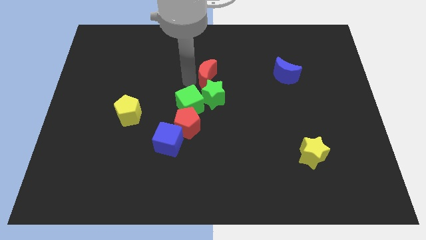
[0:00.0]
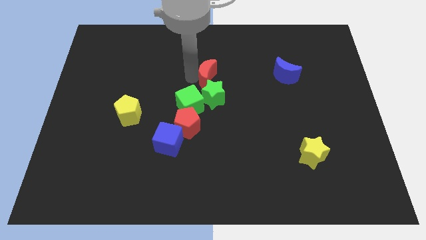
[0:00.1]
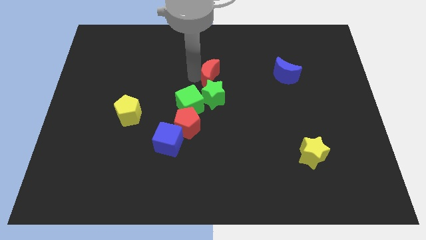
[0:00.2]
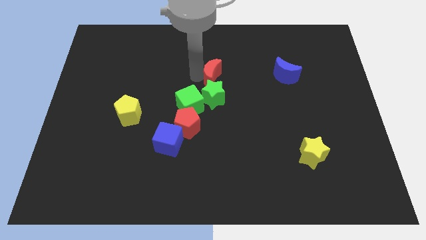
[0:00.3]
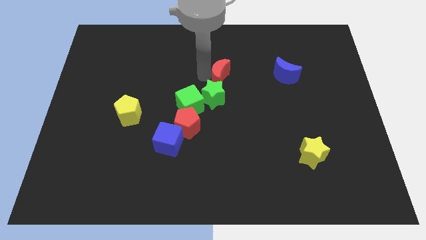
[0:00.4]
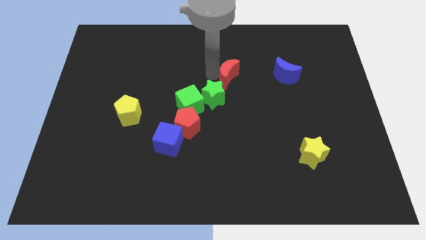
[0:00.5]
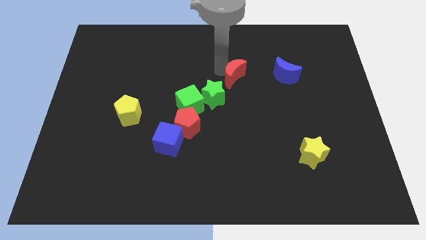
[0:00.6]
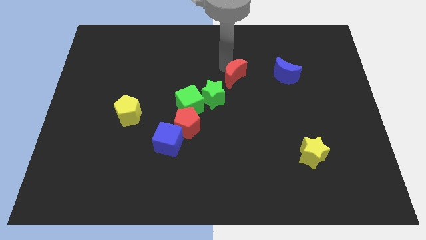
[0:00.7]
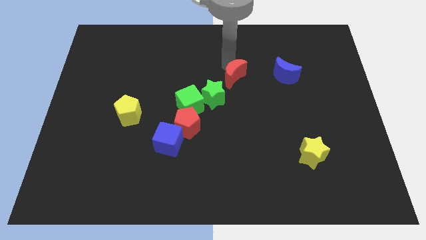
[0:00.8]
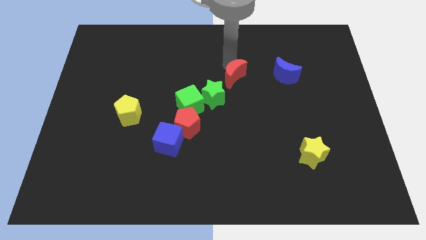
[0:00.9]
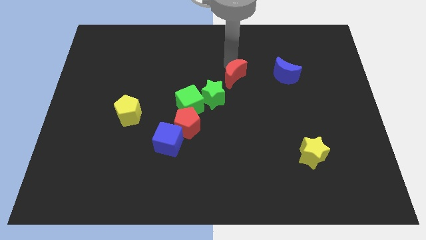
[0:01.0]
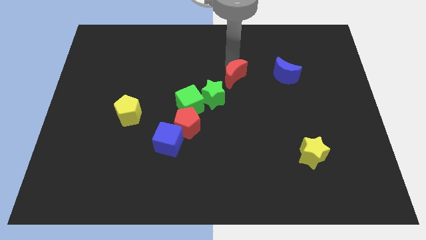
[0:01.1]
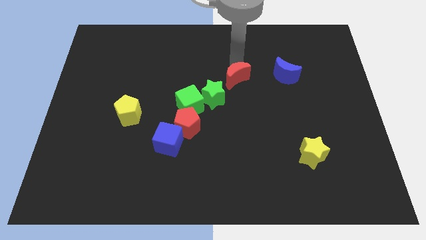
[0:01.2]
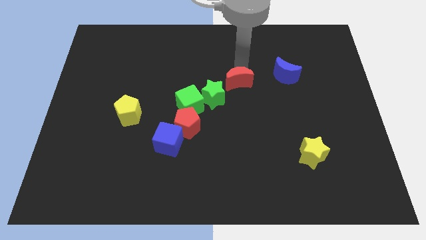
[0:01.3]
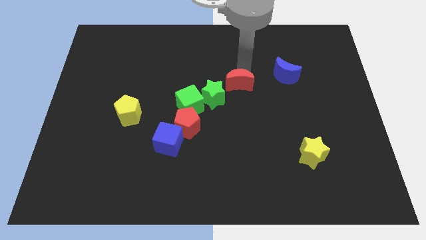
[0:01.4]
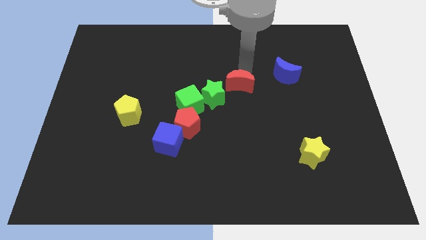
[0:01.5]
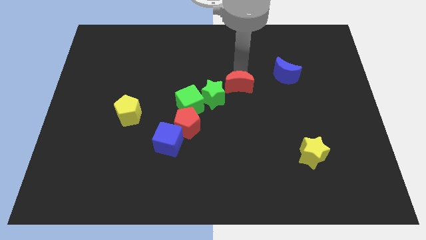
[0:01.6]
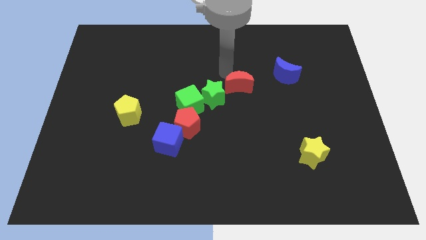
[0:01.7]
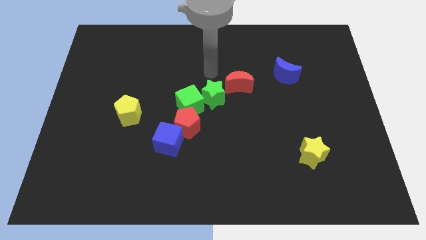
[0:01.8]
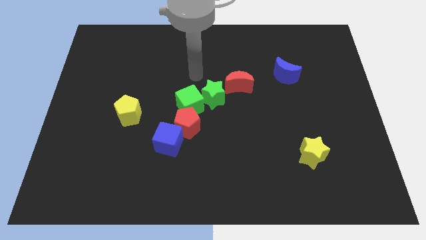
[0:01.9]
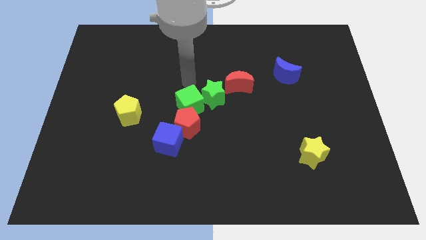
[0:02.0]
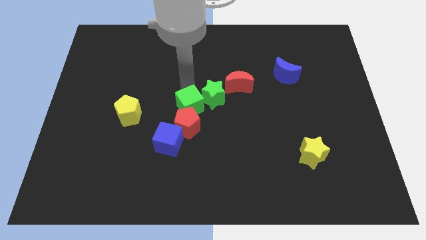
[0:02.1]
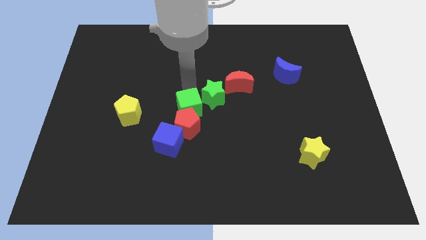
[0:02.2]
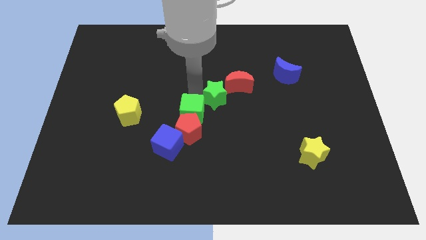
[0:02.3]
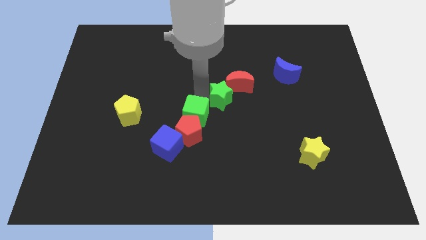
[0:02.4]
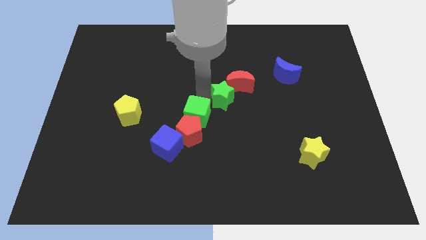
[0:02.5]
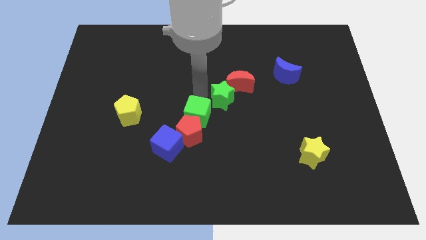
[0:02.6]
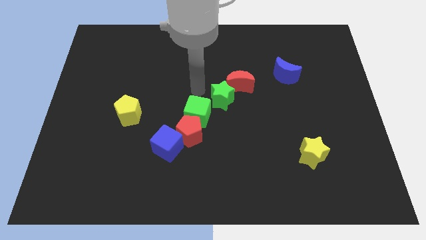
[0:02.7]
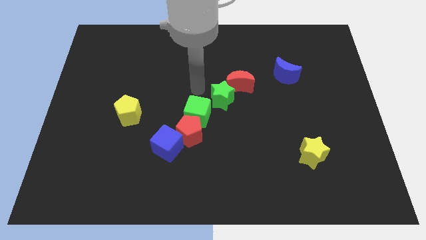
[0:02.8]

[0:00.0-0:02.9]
slightly move the green cube and the red crescent towards down

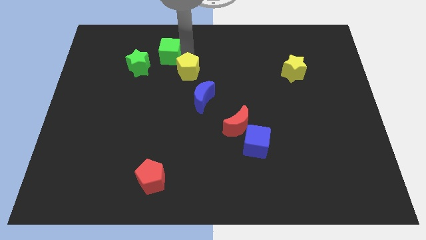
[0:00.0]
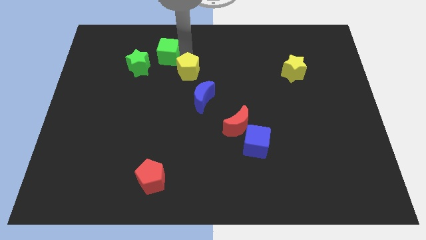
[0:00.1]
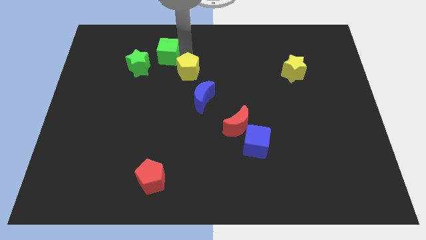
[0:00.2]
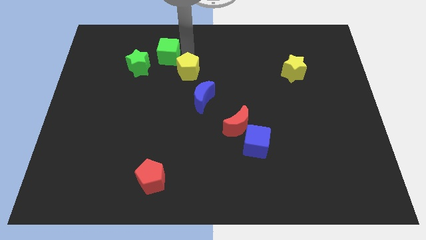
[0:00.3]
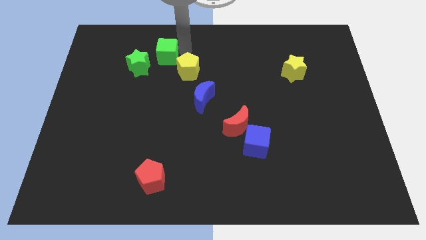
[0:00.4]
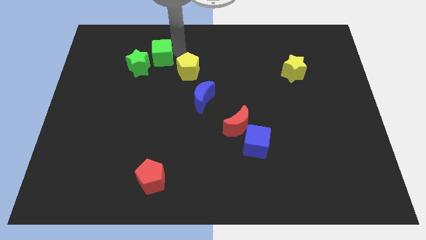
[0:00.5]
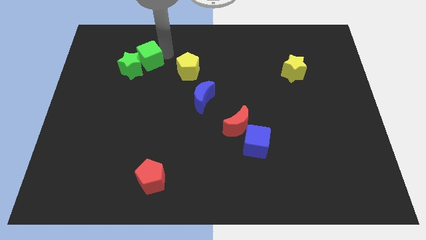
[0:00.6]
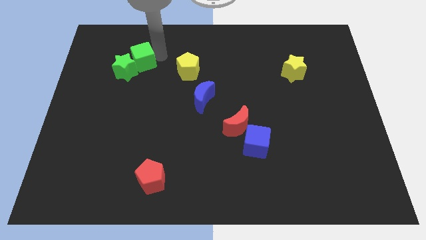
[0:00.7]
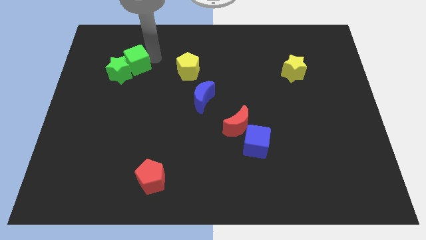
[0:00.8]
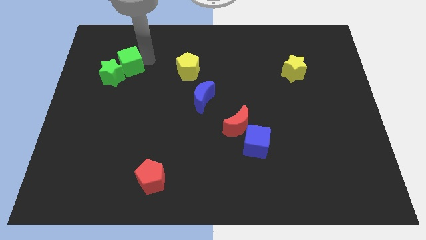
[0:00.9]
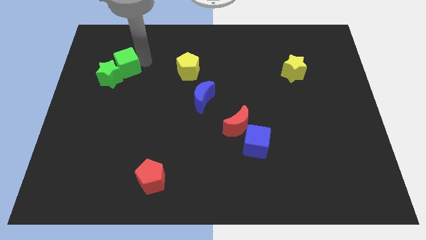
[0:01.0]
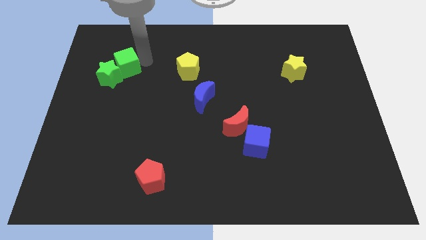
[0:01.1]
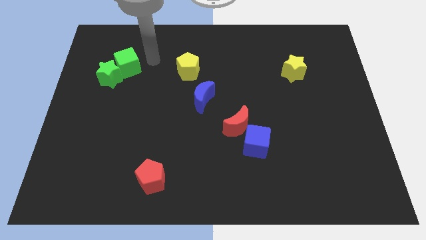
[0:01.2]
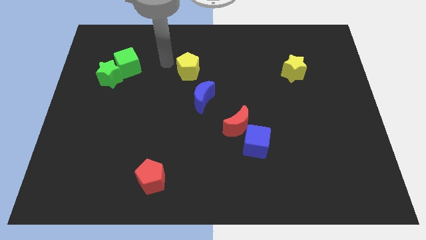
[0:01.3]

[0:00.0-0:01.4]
push the green cube into the green star

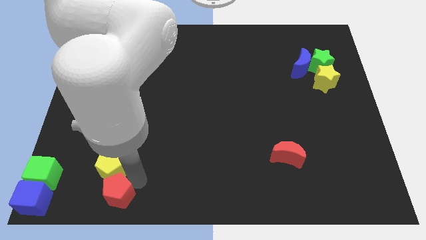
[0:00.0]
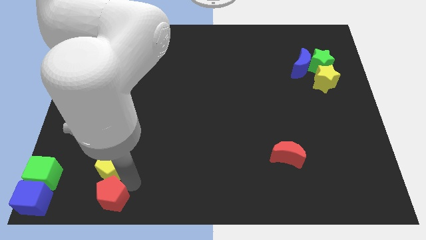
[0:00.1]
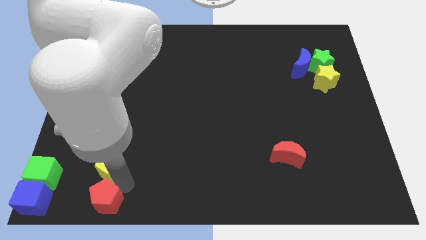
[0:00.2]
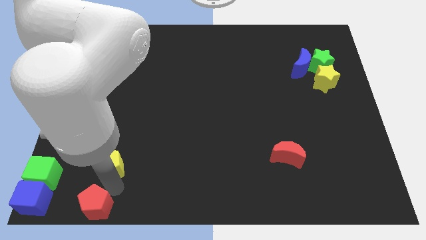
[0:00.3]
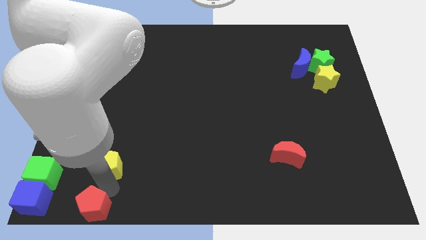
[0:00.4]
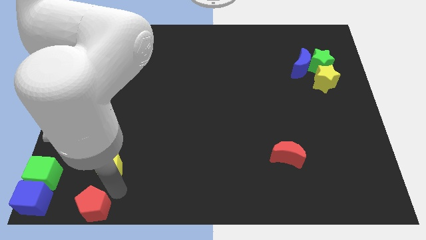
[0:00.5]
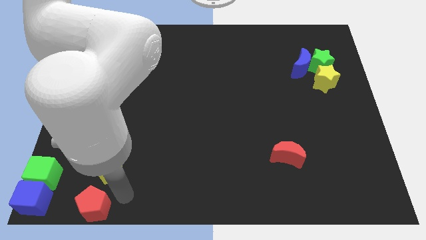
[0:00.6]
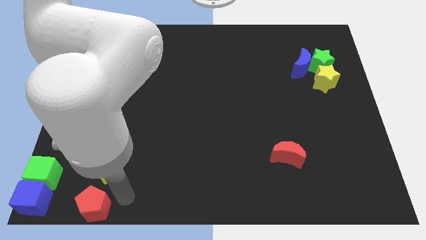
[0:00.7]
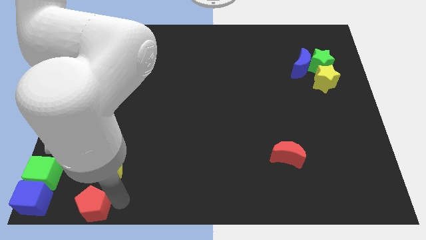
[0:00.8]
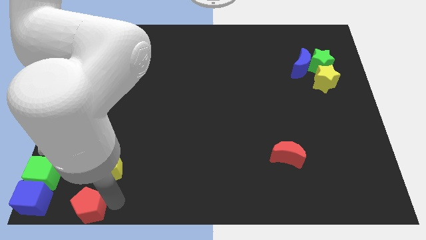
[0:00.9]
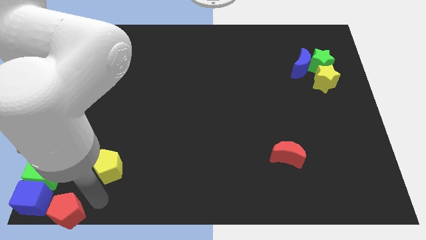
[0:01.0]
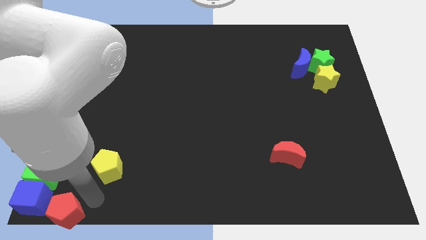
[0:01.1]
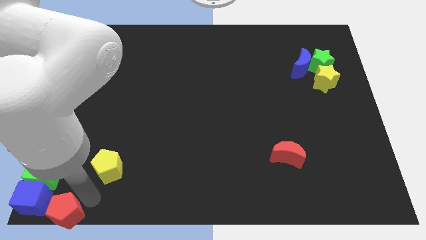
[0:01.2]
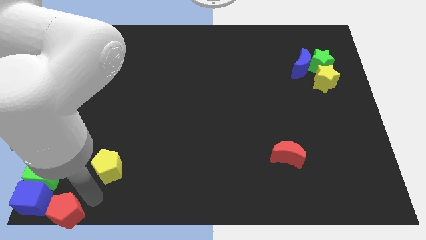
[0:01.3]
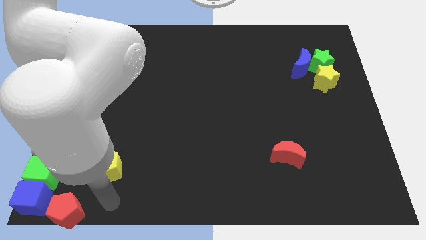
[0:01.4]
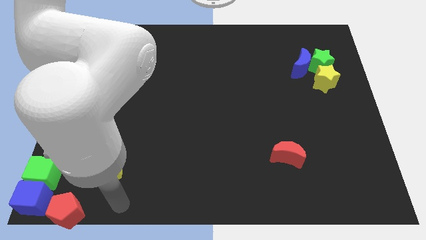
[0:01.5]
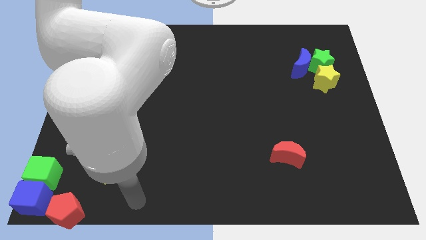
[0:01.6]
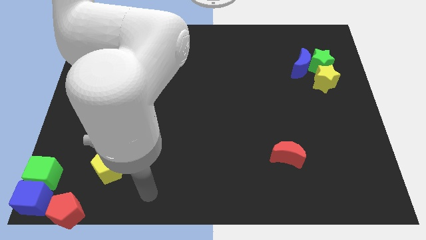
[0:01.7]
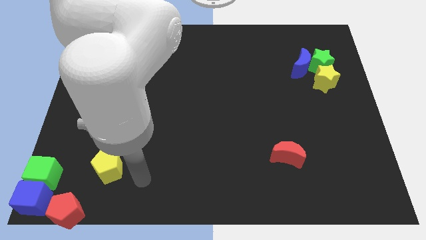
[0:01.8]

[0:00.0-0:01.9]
move red pentagon to the right of blue cube

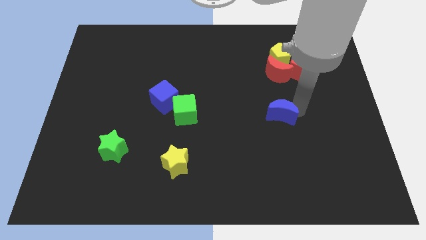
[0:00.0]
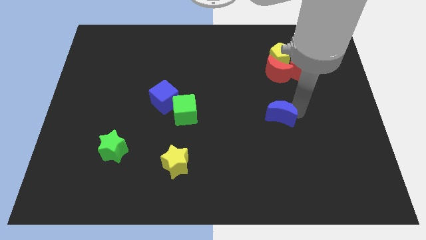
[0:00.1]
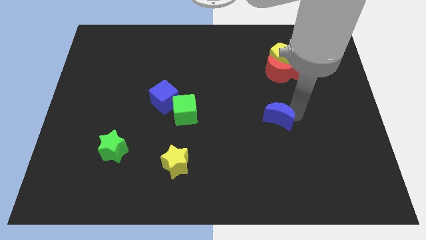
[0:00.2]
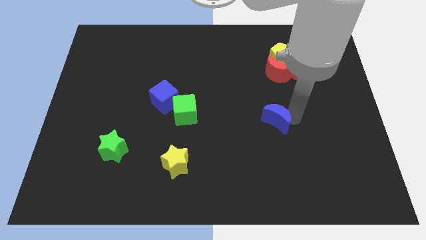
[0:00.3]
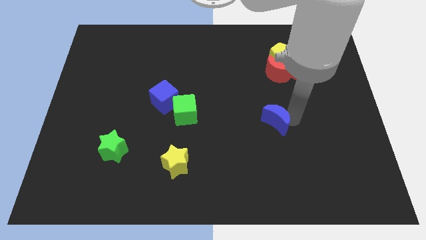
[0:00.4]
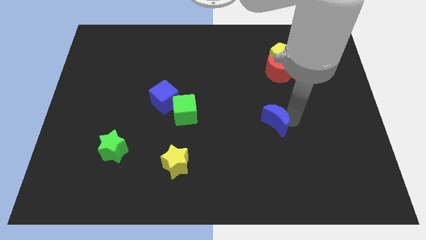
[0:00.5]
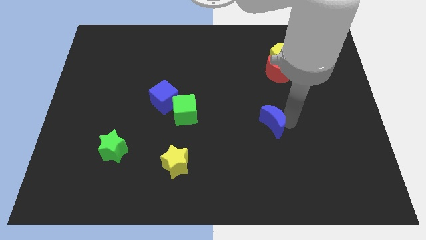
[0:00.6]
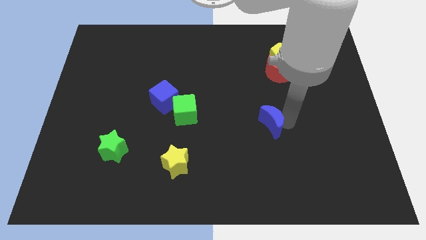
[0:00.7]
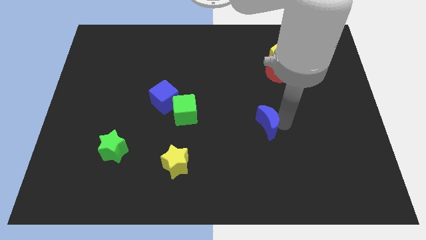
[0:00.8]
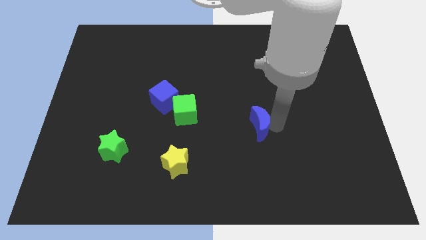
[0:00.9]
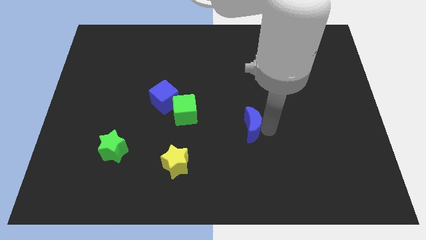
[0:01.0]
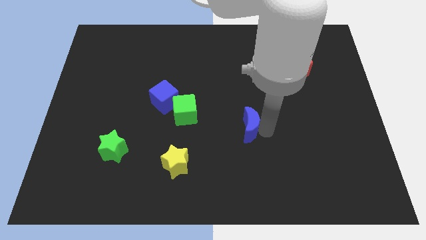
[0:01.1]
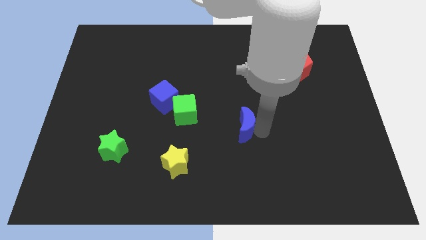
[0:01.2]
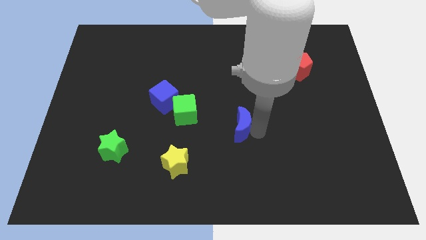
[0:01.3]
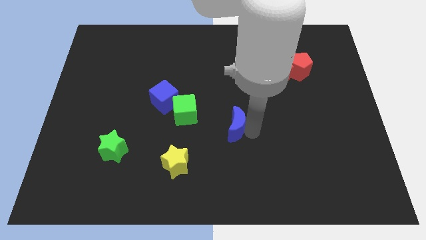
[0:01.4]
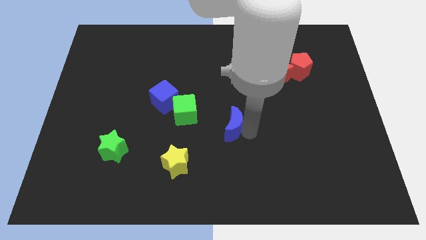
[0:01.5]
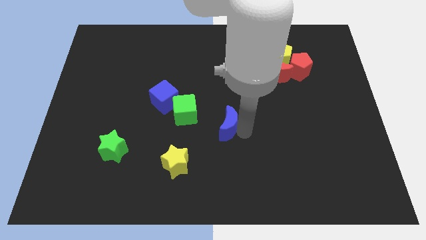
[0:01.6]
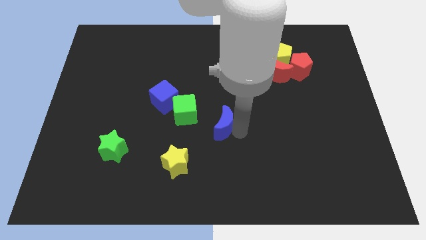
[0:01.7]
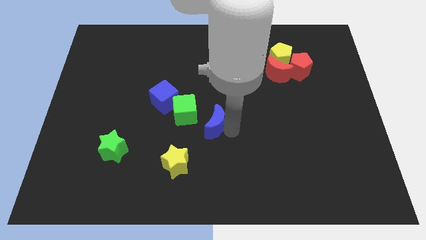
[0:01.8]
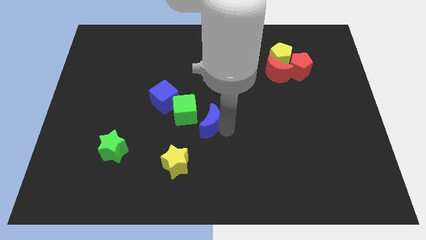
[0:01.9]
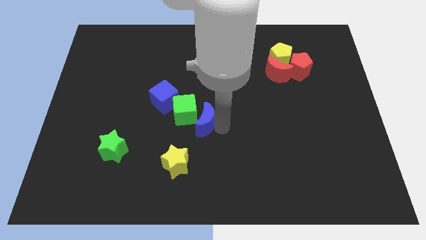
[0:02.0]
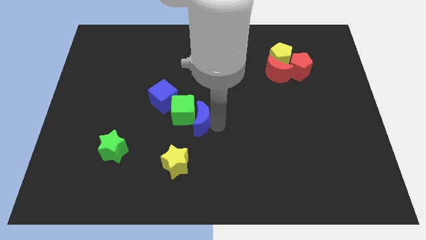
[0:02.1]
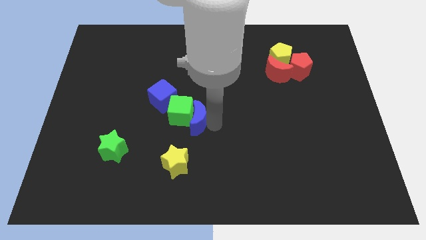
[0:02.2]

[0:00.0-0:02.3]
push the blue crescent to the right of the green cube

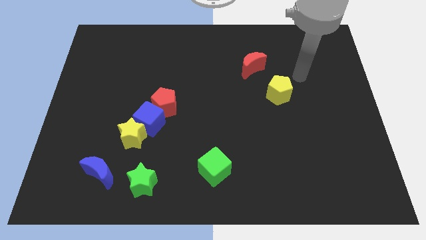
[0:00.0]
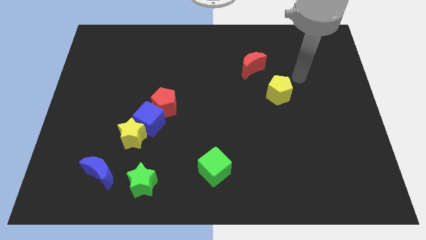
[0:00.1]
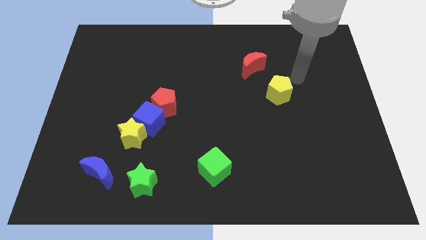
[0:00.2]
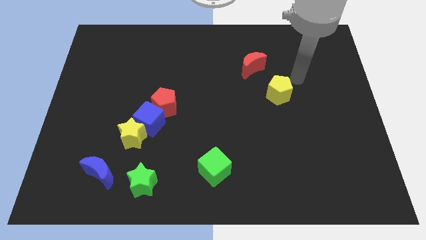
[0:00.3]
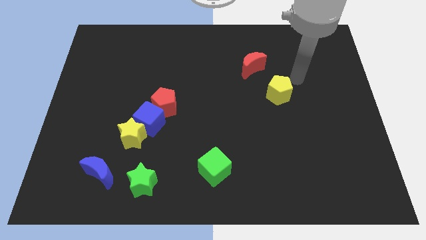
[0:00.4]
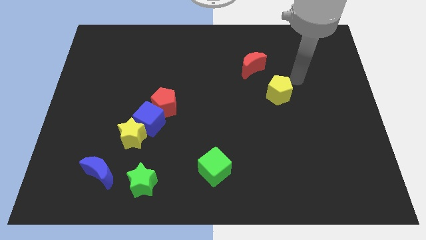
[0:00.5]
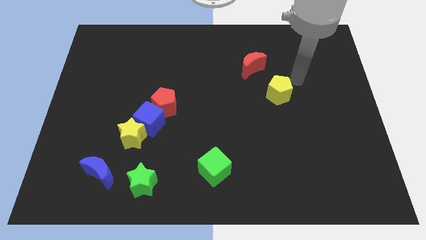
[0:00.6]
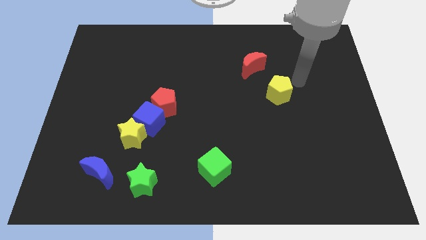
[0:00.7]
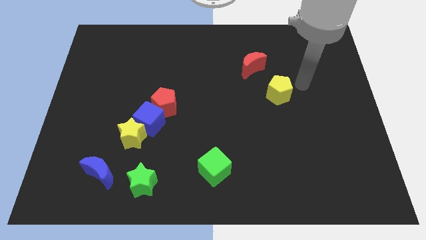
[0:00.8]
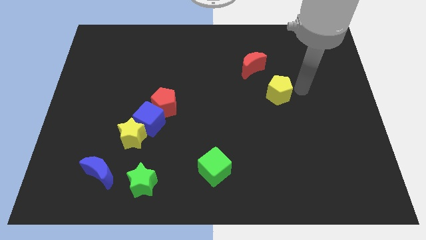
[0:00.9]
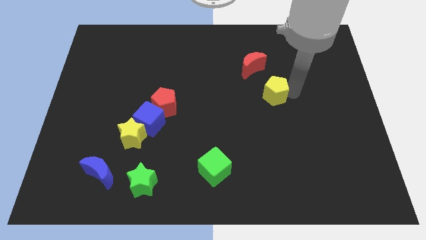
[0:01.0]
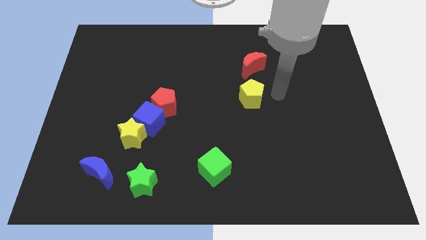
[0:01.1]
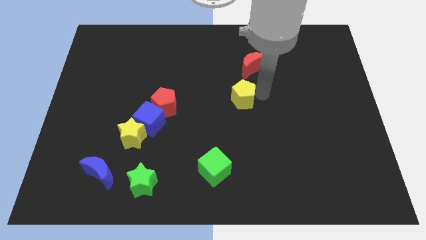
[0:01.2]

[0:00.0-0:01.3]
push the yellow pentagon to the left
